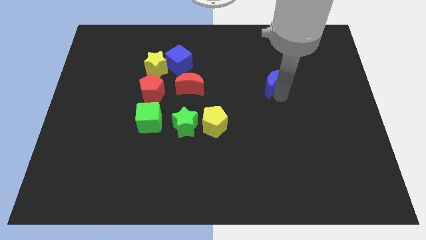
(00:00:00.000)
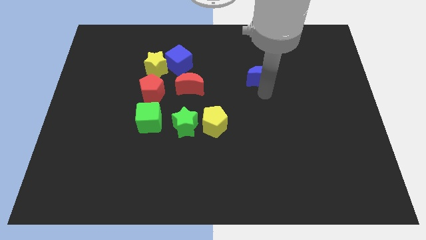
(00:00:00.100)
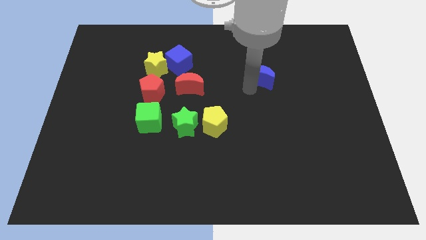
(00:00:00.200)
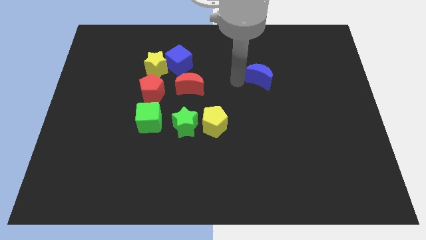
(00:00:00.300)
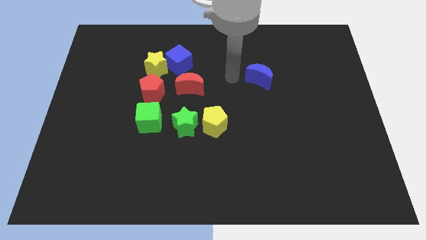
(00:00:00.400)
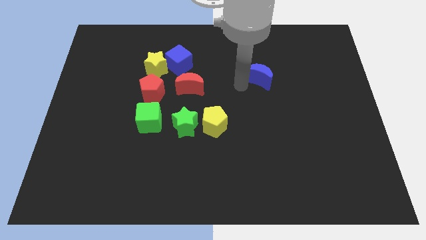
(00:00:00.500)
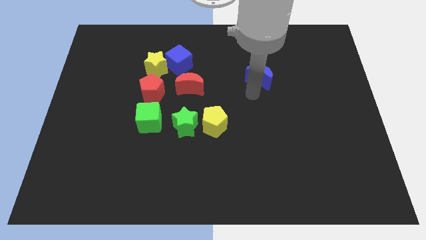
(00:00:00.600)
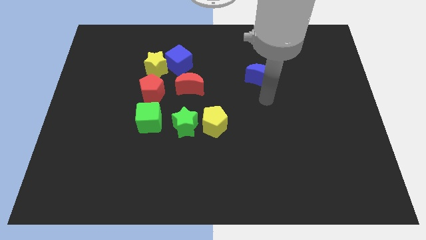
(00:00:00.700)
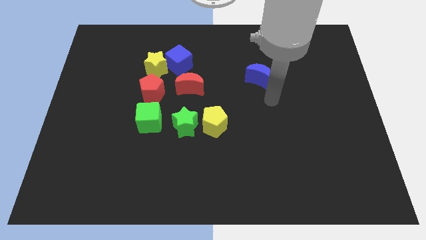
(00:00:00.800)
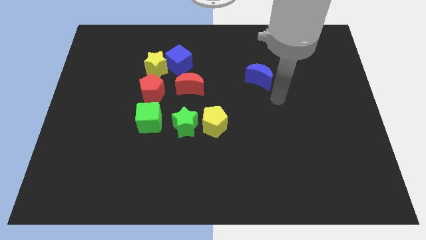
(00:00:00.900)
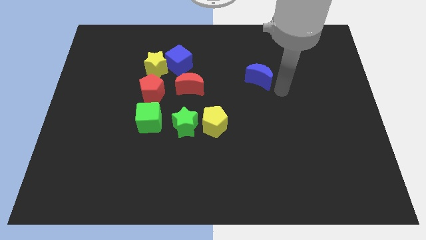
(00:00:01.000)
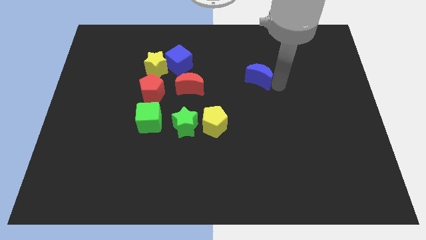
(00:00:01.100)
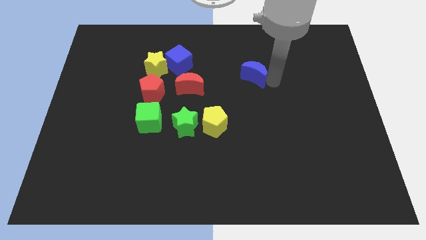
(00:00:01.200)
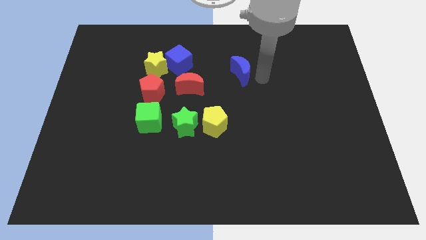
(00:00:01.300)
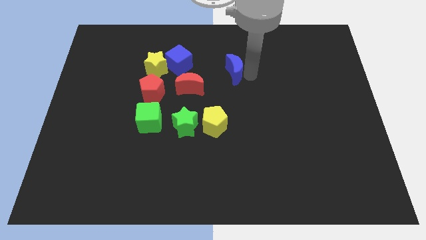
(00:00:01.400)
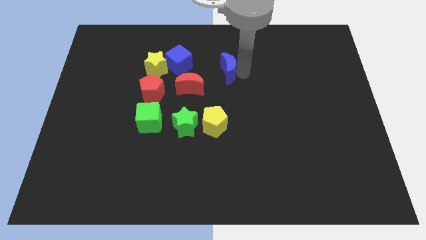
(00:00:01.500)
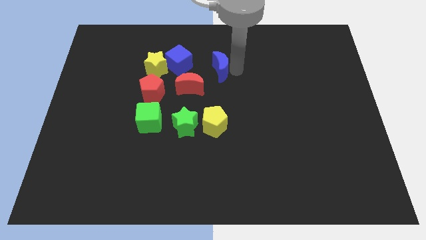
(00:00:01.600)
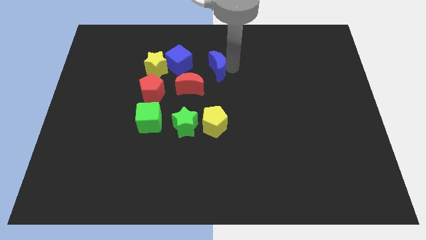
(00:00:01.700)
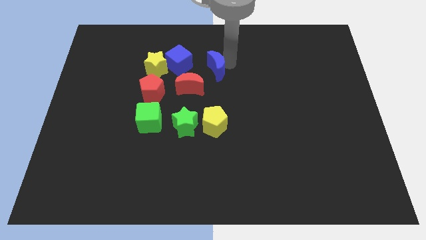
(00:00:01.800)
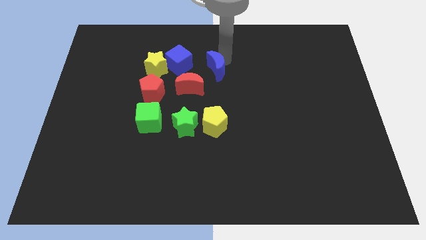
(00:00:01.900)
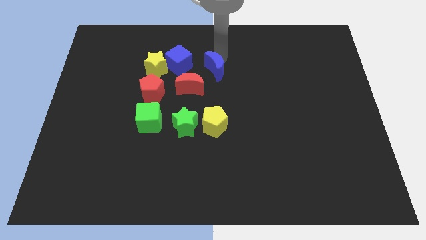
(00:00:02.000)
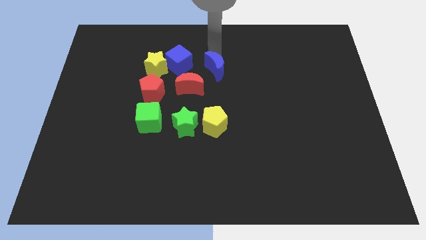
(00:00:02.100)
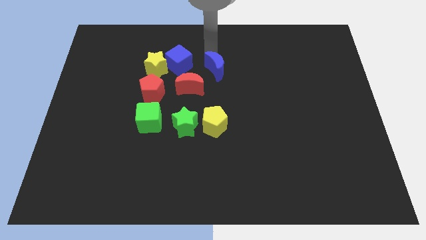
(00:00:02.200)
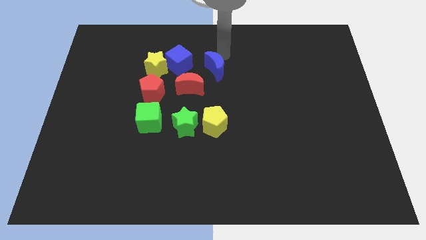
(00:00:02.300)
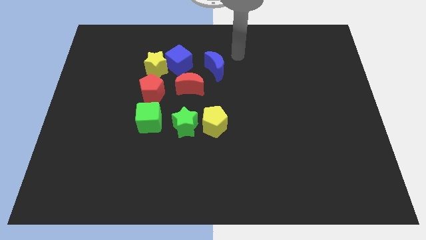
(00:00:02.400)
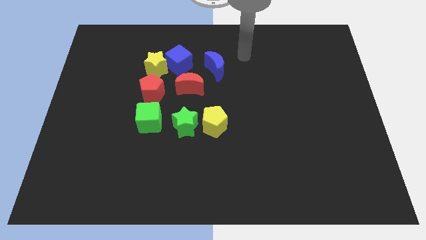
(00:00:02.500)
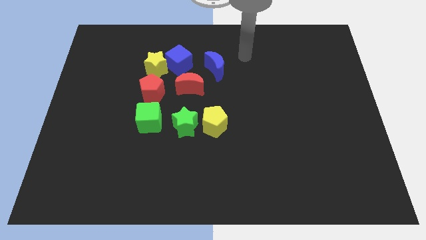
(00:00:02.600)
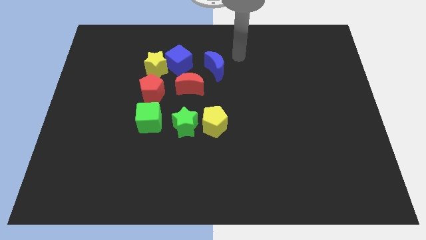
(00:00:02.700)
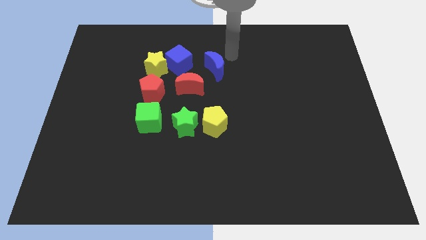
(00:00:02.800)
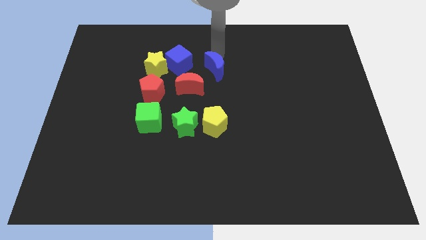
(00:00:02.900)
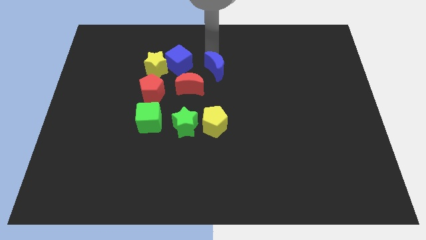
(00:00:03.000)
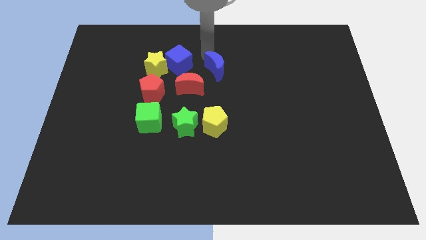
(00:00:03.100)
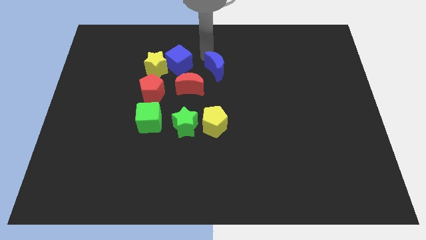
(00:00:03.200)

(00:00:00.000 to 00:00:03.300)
move the blue crescent to the top of the yellow pentagon

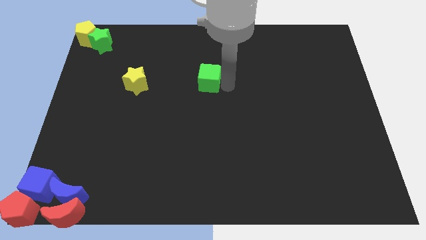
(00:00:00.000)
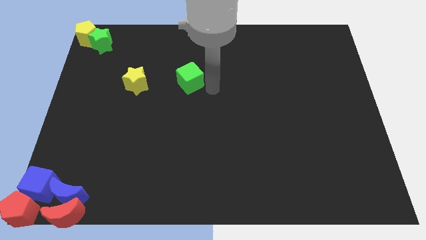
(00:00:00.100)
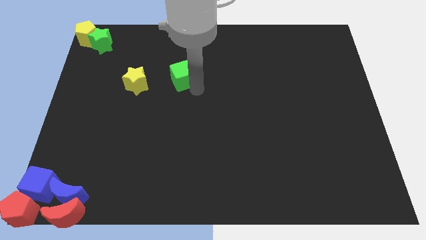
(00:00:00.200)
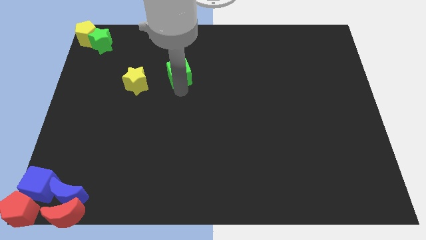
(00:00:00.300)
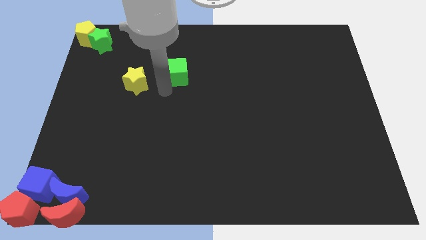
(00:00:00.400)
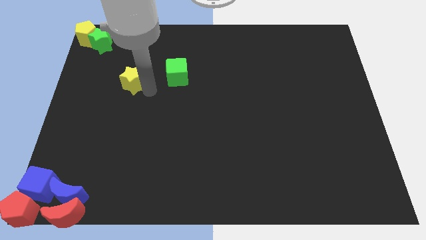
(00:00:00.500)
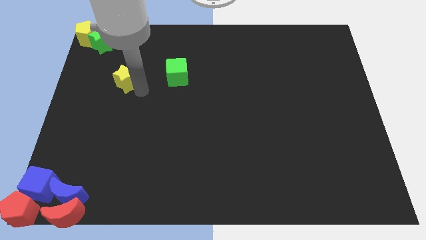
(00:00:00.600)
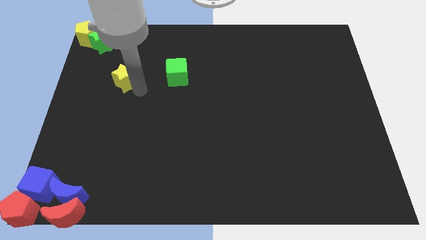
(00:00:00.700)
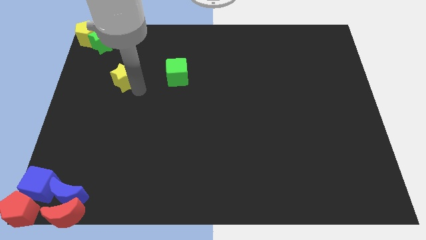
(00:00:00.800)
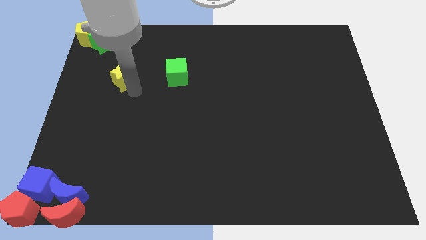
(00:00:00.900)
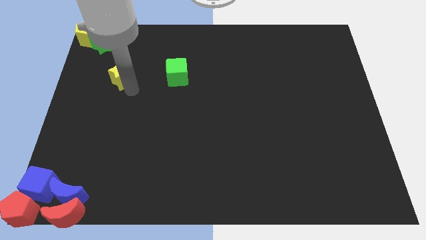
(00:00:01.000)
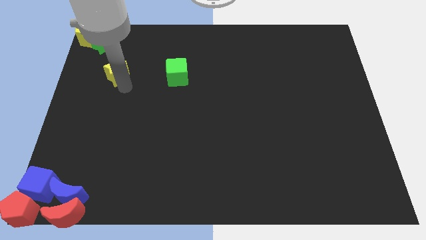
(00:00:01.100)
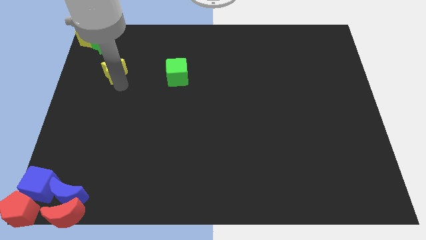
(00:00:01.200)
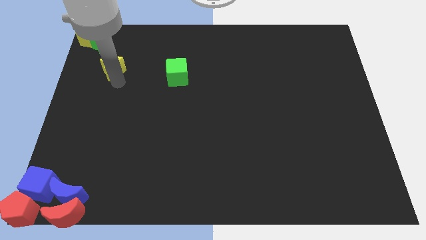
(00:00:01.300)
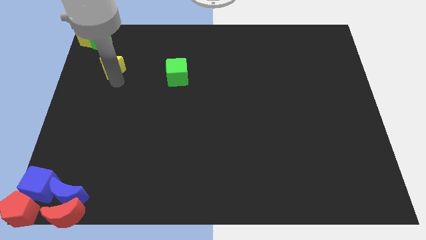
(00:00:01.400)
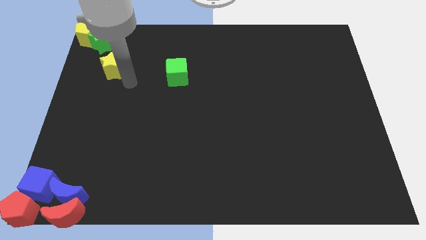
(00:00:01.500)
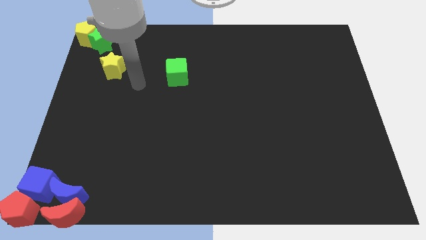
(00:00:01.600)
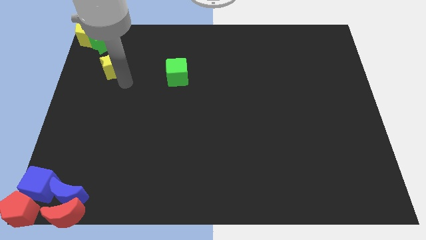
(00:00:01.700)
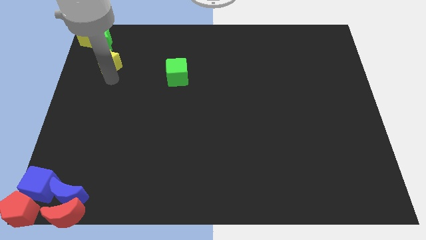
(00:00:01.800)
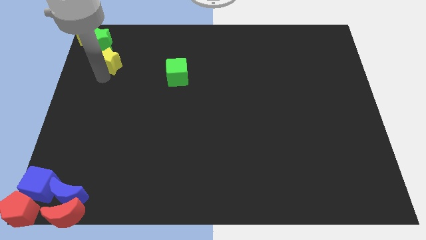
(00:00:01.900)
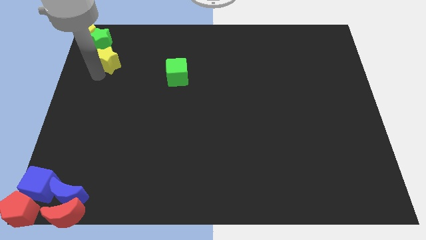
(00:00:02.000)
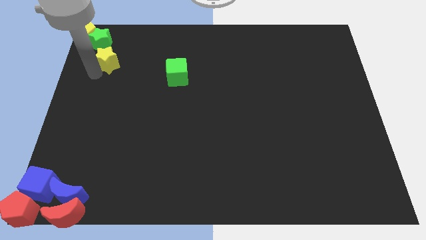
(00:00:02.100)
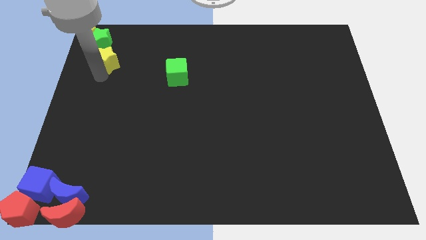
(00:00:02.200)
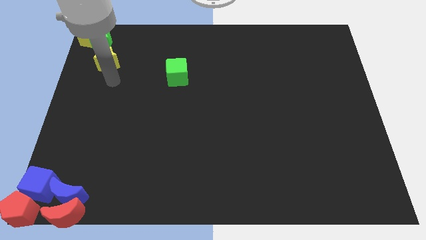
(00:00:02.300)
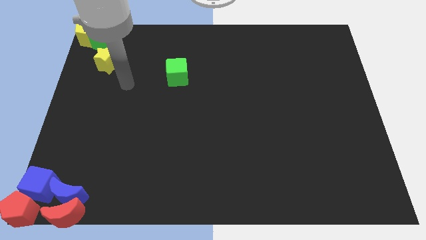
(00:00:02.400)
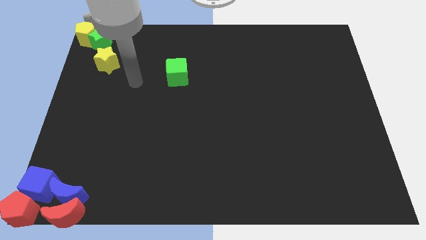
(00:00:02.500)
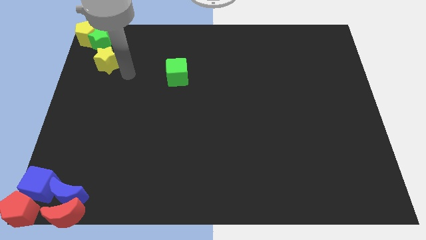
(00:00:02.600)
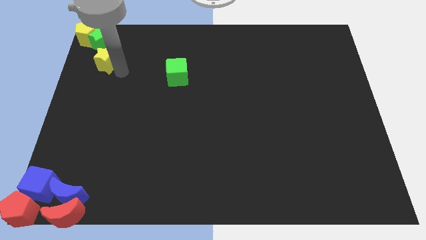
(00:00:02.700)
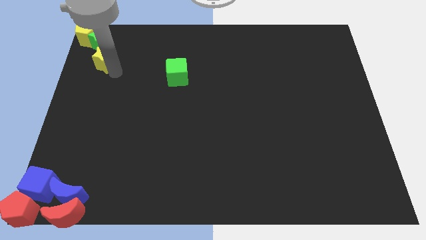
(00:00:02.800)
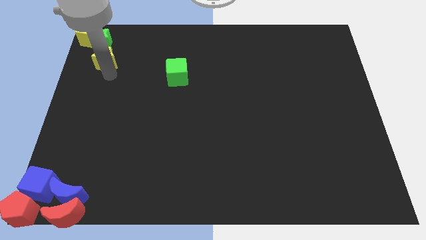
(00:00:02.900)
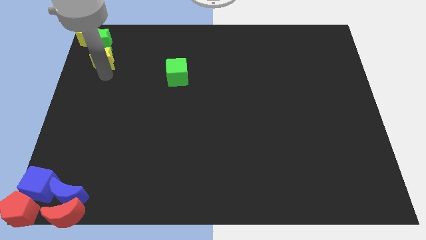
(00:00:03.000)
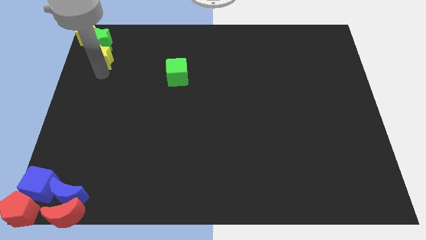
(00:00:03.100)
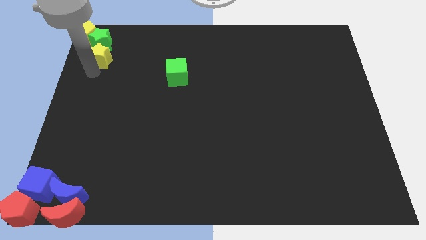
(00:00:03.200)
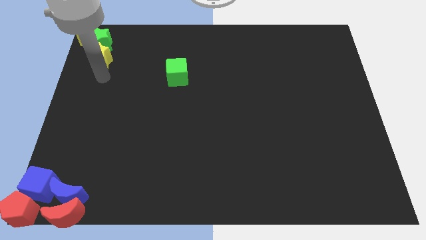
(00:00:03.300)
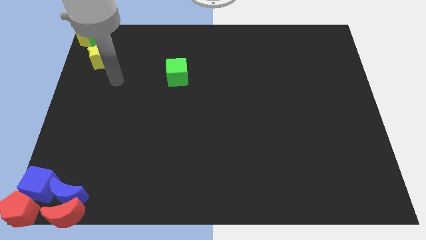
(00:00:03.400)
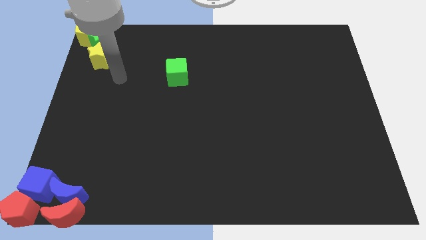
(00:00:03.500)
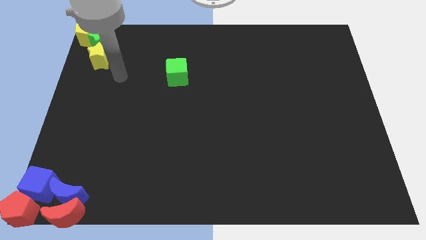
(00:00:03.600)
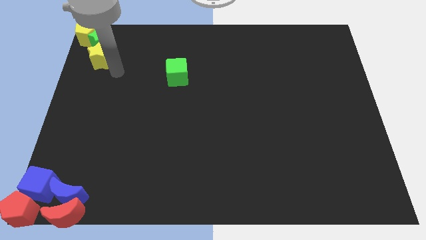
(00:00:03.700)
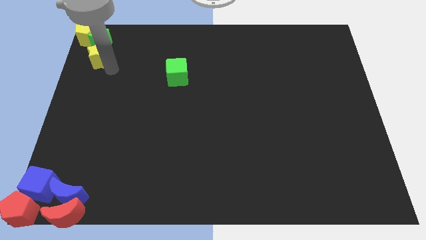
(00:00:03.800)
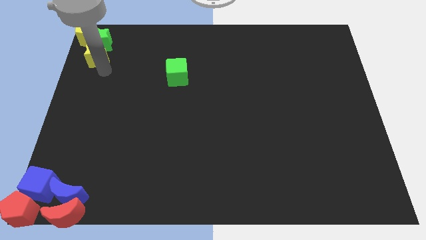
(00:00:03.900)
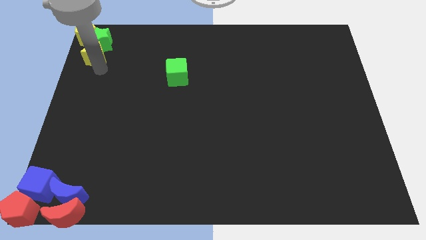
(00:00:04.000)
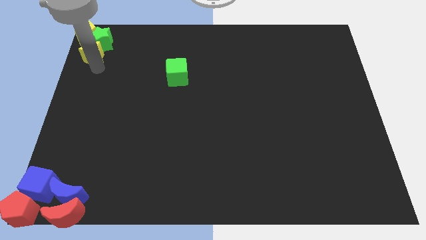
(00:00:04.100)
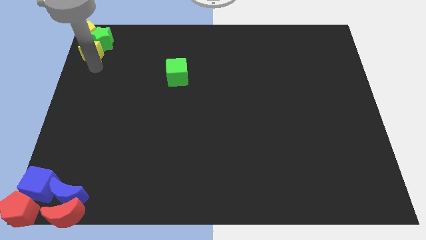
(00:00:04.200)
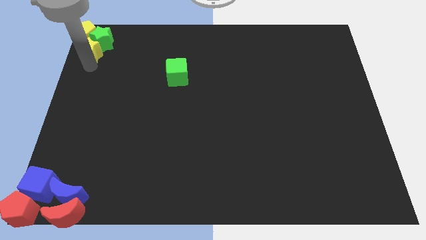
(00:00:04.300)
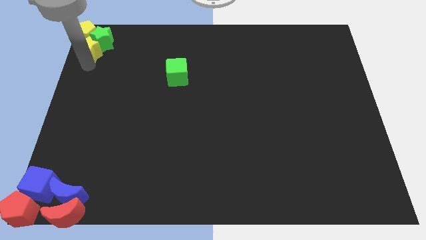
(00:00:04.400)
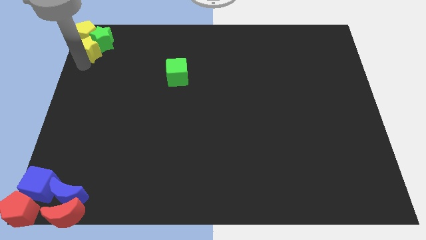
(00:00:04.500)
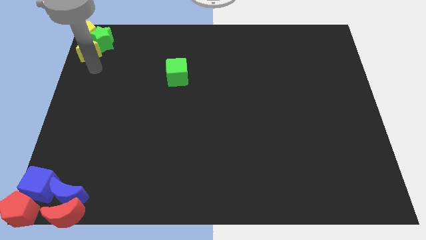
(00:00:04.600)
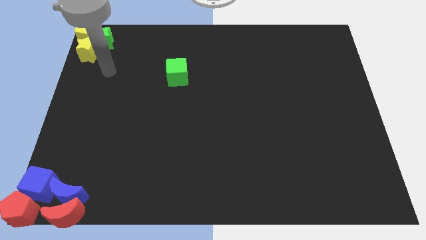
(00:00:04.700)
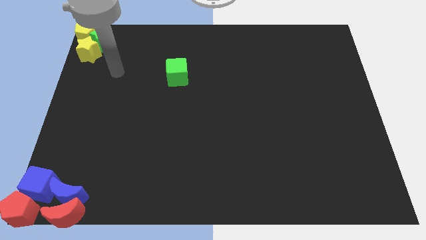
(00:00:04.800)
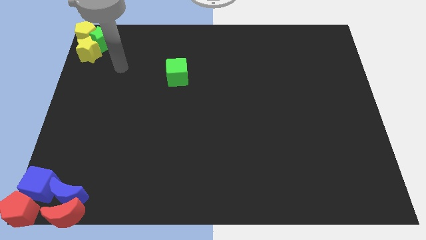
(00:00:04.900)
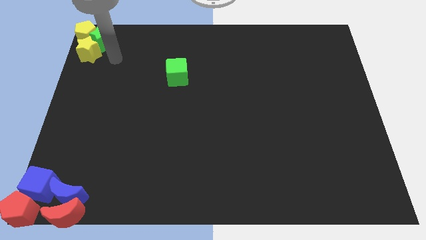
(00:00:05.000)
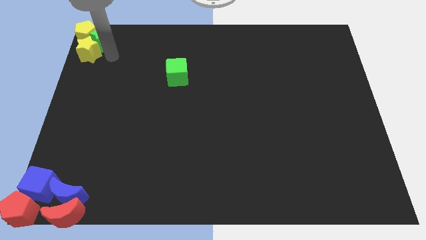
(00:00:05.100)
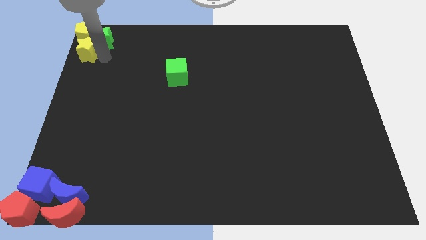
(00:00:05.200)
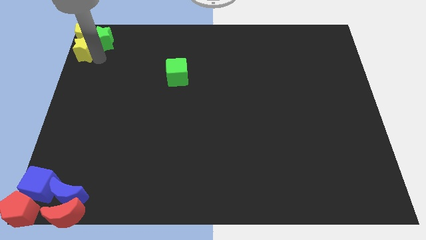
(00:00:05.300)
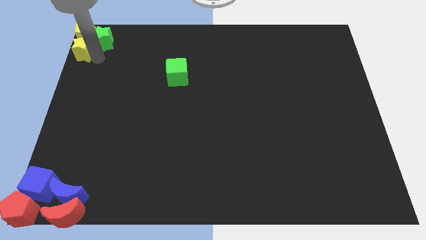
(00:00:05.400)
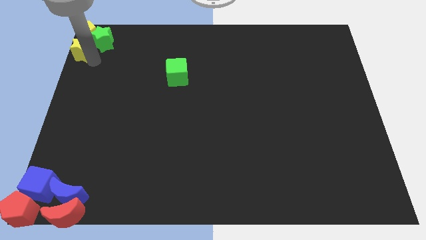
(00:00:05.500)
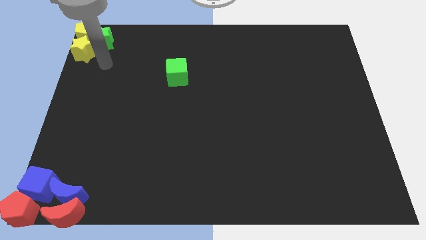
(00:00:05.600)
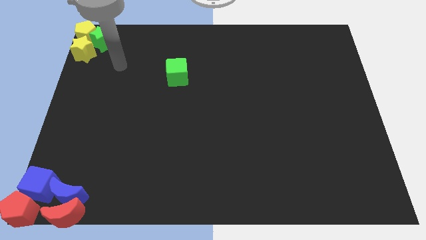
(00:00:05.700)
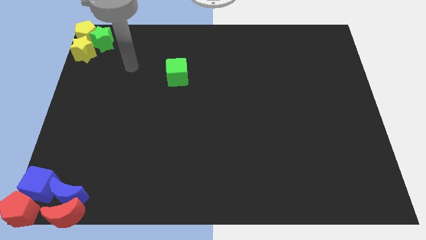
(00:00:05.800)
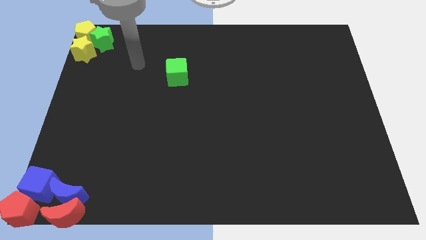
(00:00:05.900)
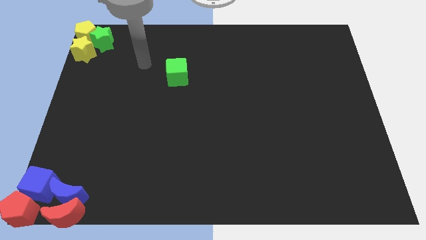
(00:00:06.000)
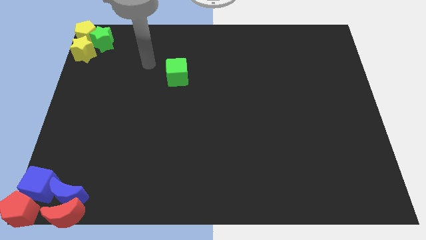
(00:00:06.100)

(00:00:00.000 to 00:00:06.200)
move the yellow star below to the yellow pentagon
